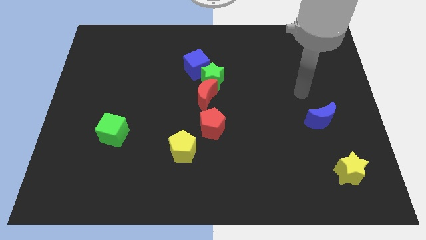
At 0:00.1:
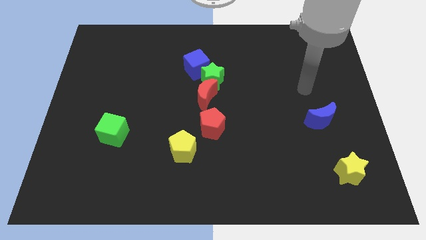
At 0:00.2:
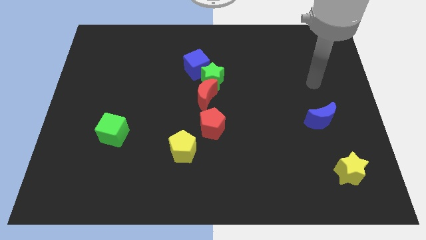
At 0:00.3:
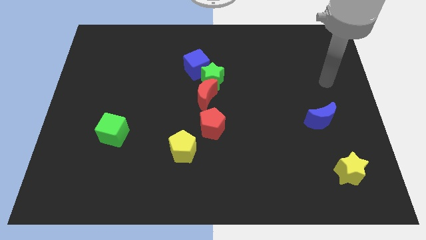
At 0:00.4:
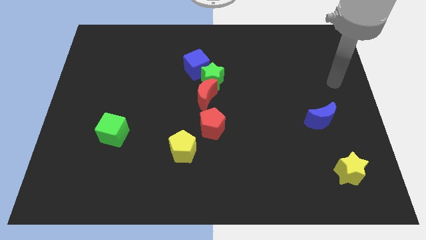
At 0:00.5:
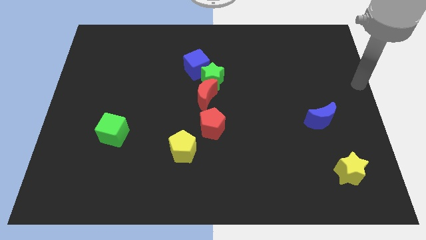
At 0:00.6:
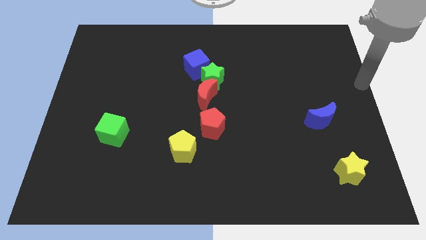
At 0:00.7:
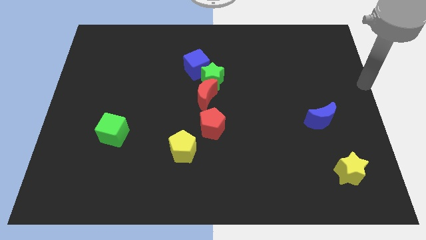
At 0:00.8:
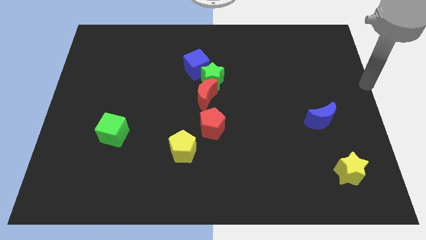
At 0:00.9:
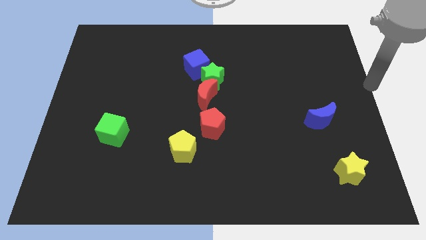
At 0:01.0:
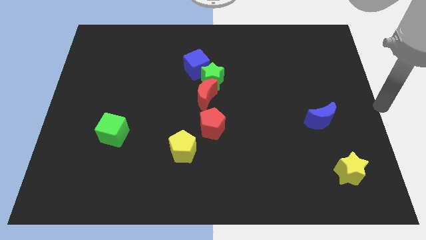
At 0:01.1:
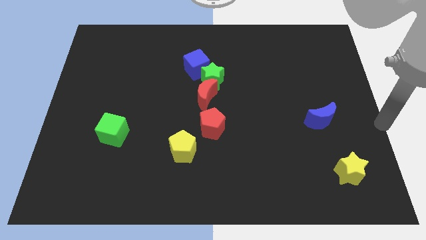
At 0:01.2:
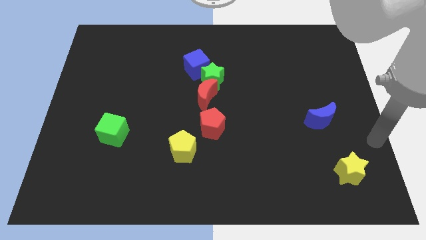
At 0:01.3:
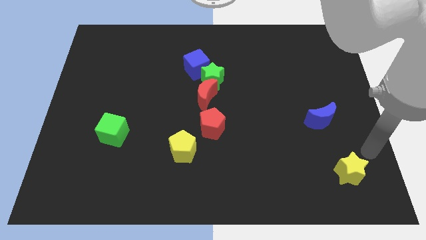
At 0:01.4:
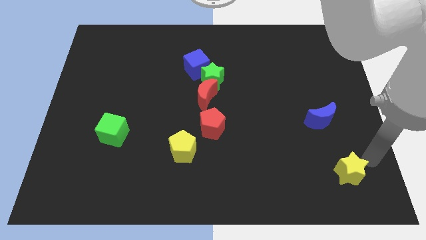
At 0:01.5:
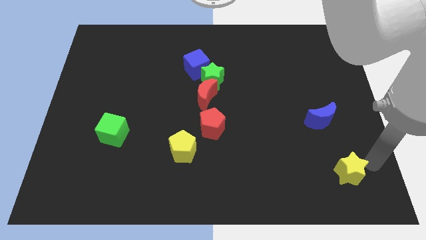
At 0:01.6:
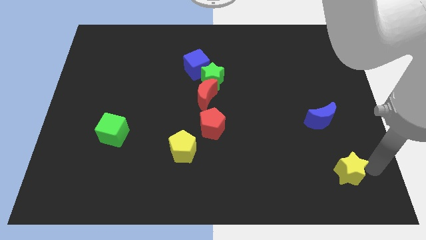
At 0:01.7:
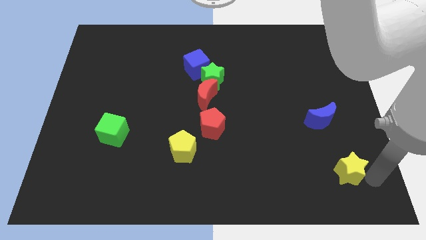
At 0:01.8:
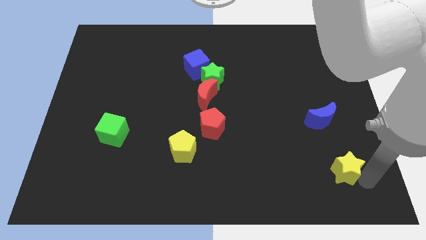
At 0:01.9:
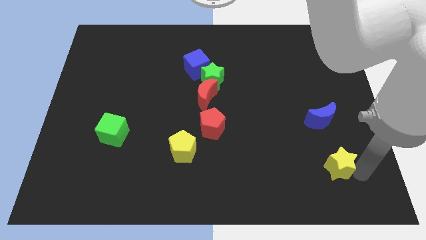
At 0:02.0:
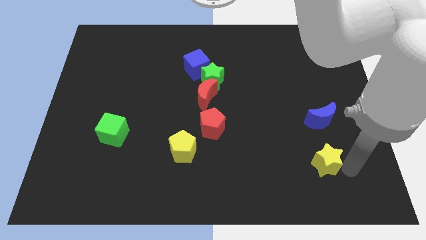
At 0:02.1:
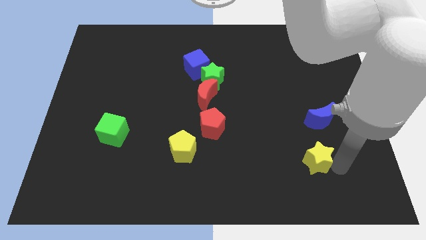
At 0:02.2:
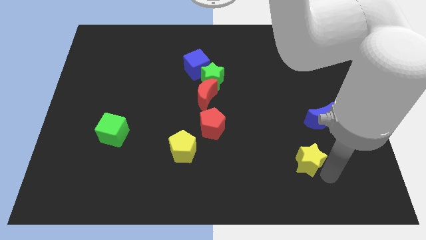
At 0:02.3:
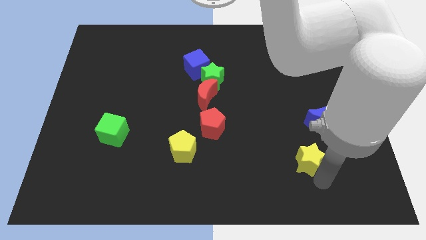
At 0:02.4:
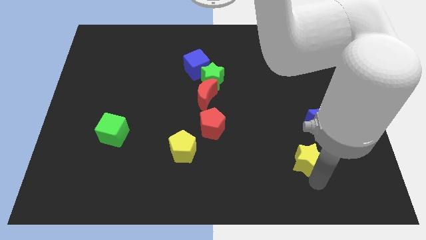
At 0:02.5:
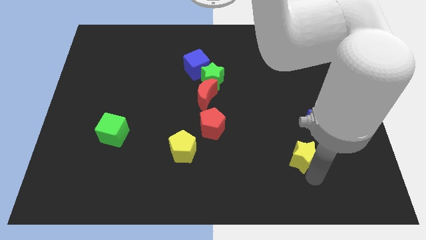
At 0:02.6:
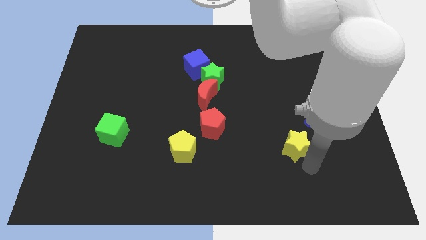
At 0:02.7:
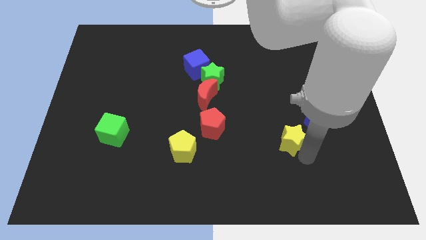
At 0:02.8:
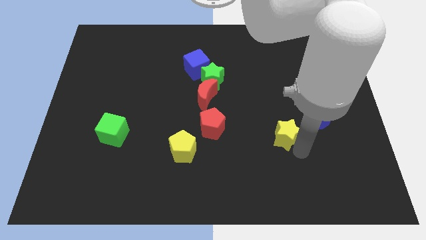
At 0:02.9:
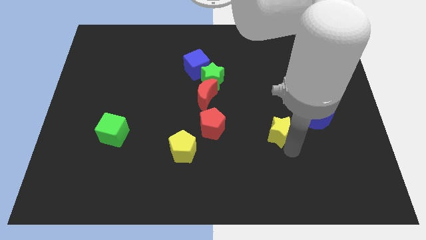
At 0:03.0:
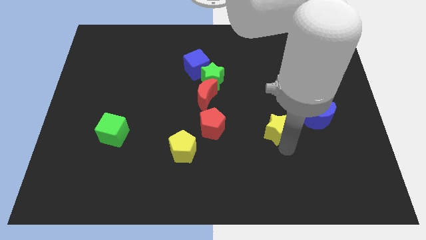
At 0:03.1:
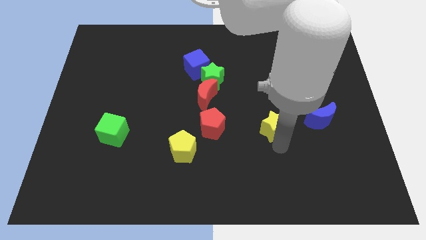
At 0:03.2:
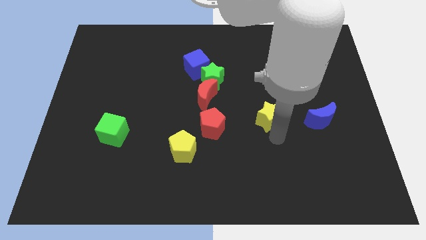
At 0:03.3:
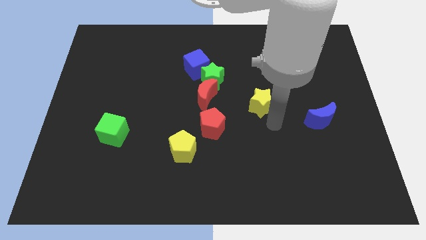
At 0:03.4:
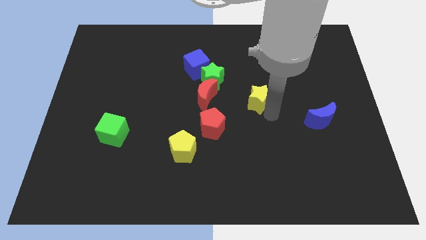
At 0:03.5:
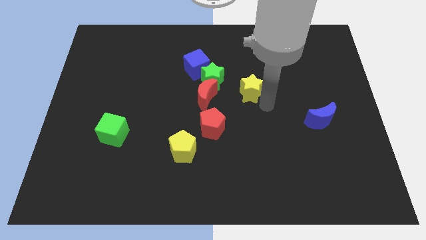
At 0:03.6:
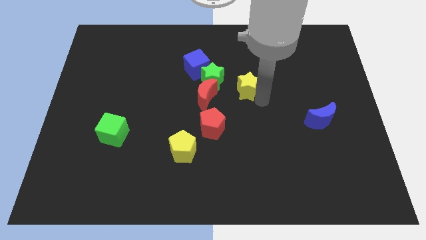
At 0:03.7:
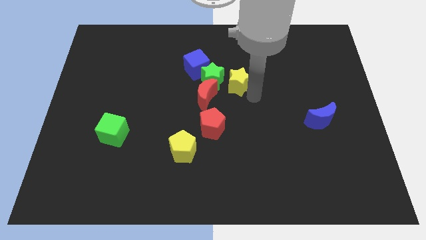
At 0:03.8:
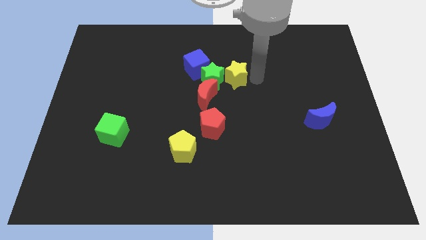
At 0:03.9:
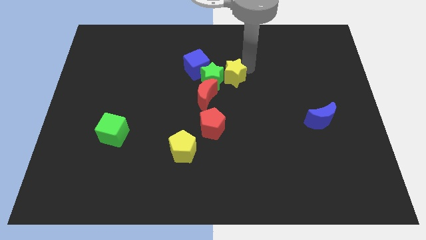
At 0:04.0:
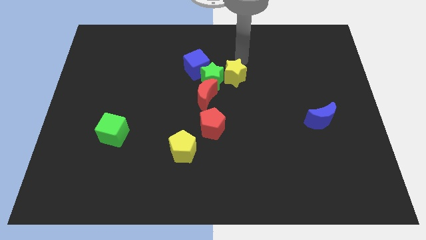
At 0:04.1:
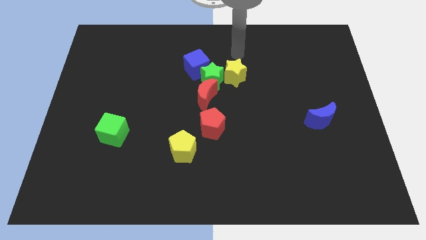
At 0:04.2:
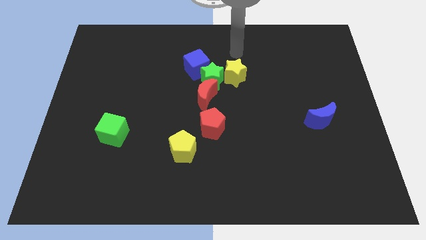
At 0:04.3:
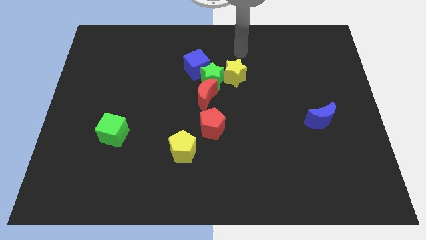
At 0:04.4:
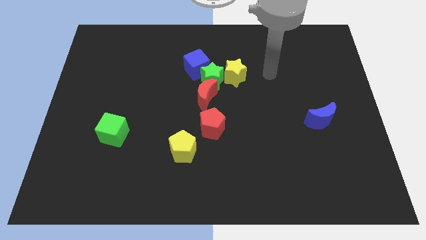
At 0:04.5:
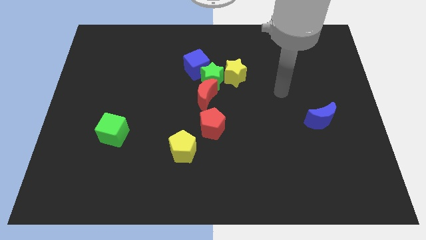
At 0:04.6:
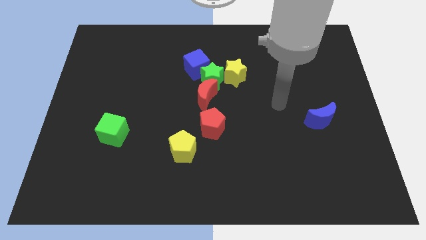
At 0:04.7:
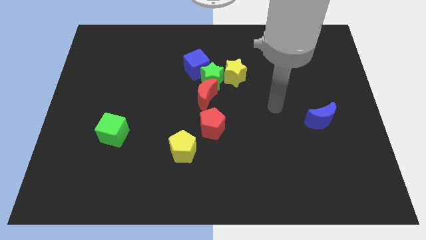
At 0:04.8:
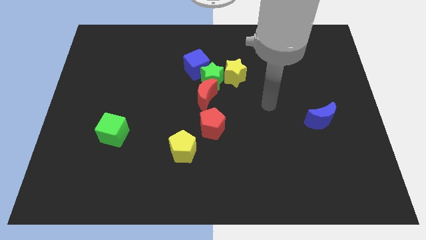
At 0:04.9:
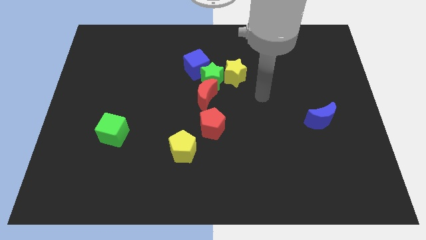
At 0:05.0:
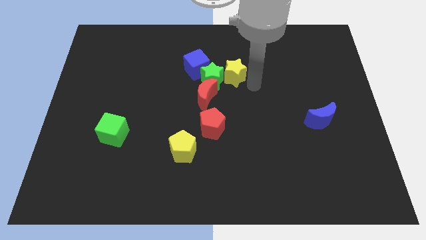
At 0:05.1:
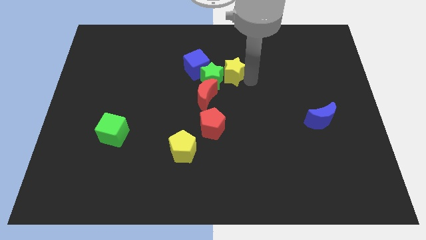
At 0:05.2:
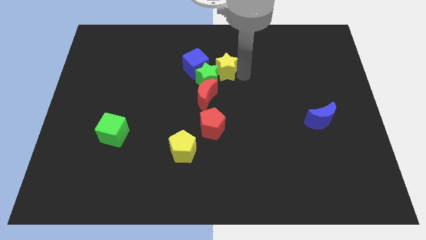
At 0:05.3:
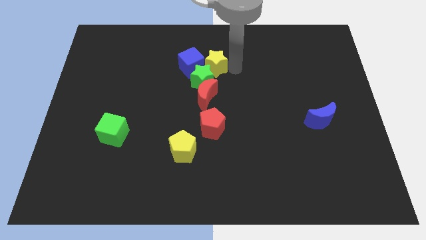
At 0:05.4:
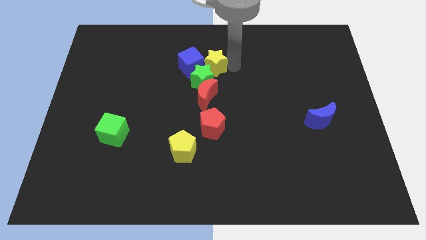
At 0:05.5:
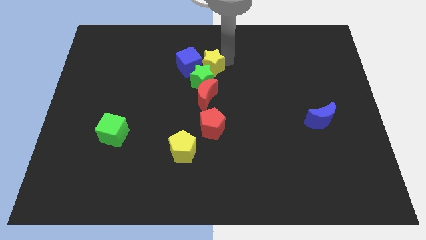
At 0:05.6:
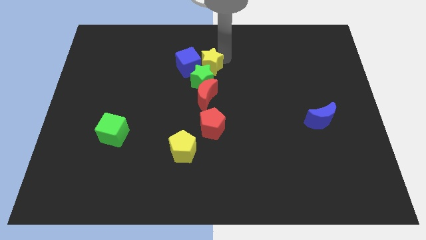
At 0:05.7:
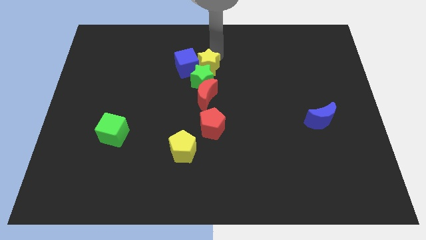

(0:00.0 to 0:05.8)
slide the yellow star next to the blue cube

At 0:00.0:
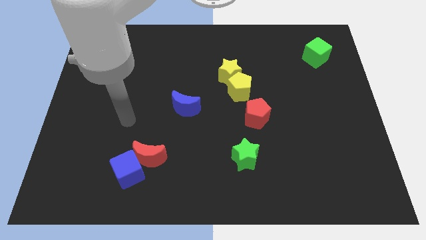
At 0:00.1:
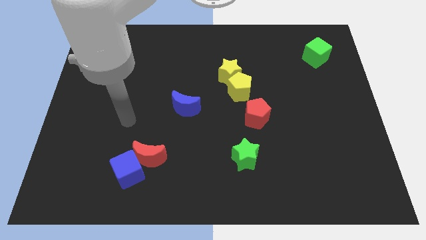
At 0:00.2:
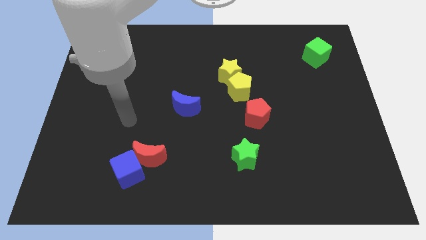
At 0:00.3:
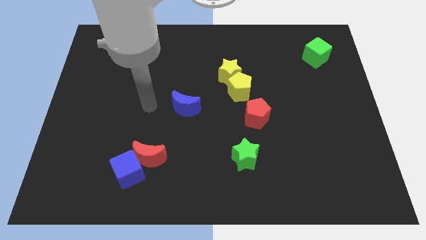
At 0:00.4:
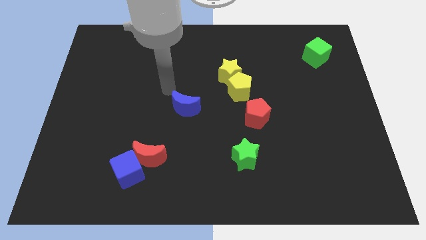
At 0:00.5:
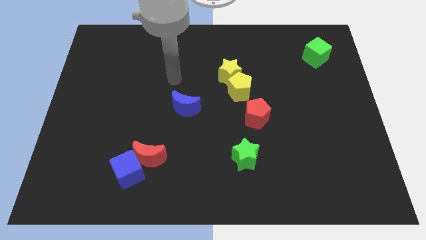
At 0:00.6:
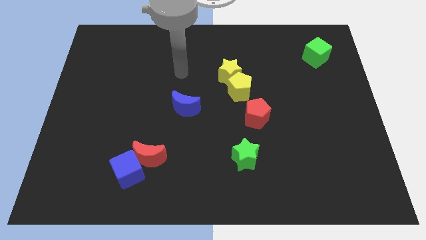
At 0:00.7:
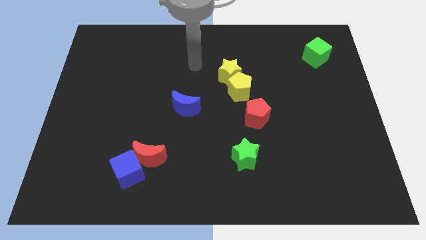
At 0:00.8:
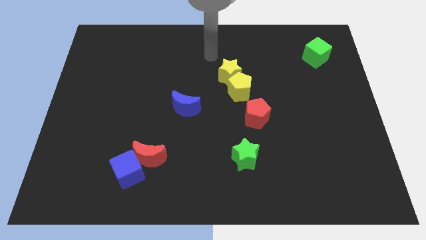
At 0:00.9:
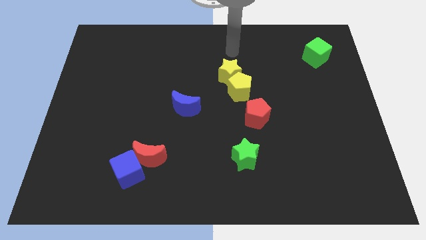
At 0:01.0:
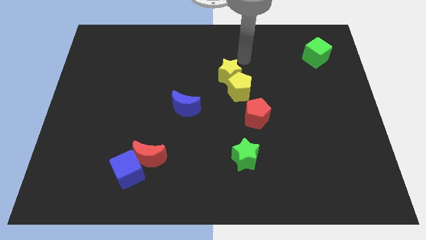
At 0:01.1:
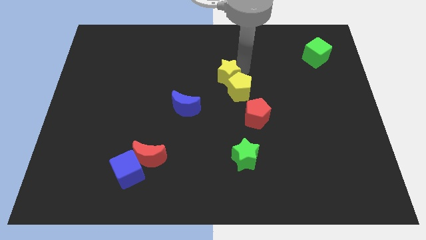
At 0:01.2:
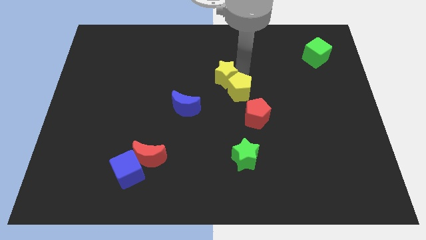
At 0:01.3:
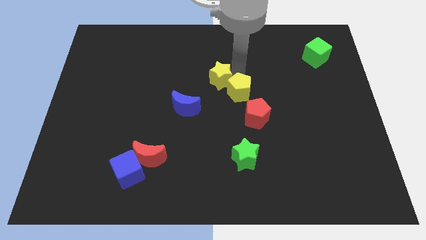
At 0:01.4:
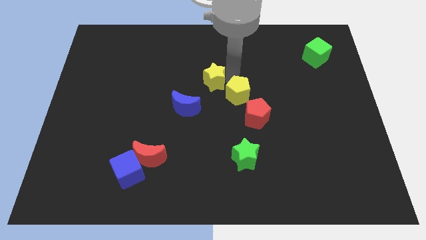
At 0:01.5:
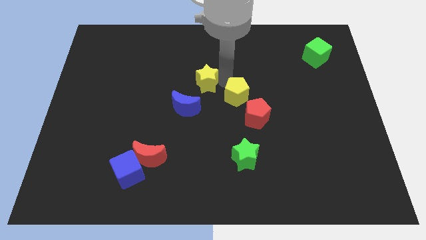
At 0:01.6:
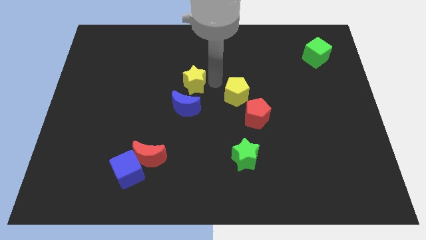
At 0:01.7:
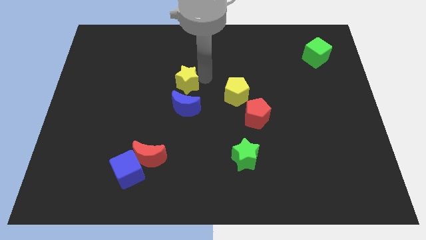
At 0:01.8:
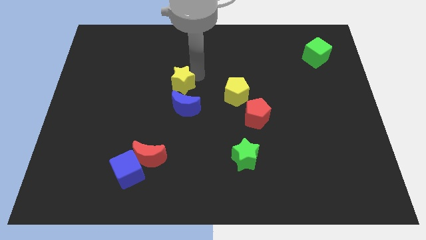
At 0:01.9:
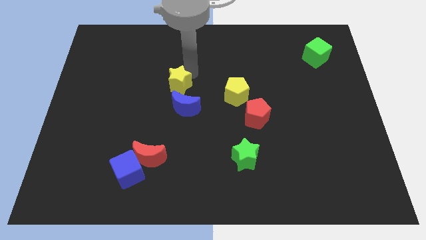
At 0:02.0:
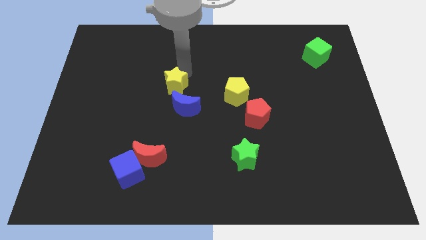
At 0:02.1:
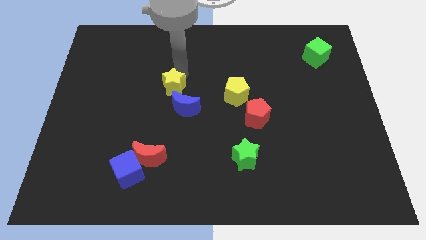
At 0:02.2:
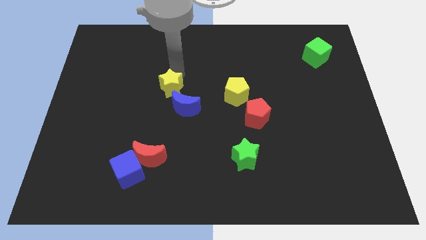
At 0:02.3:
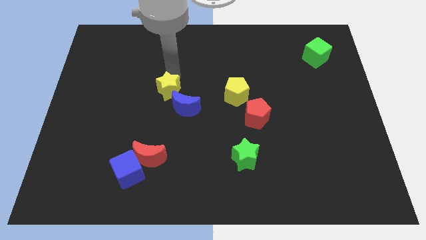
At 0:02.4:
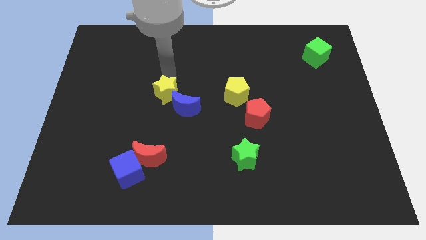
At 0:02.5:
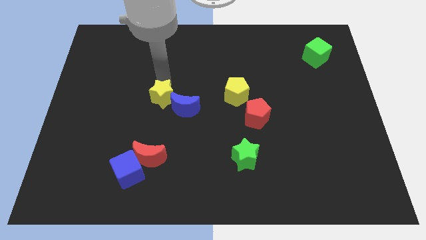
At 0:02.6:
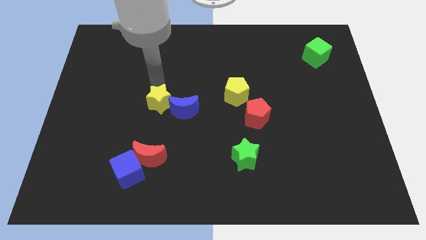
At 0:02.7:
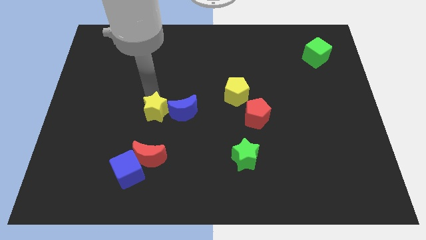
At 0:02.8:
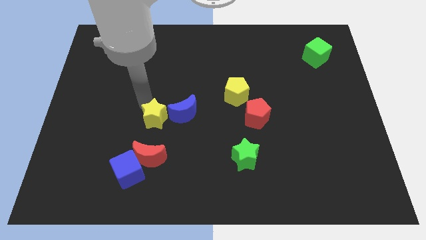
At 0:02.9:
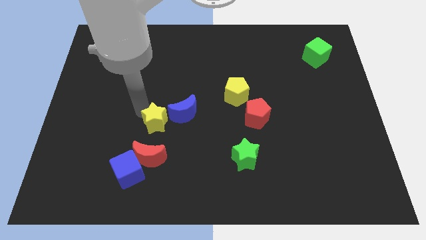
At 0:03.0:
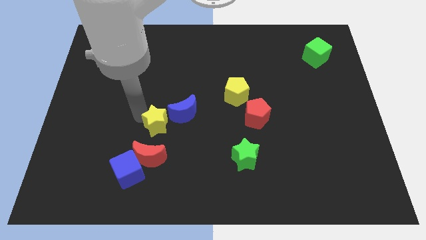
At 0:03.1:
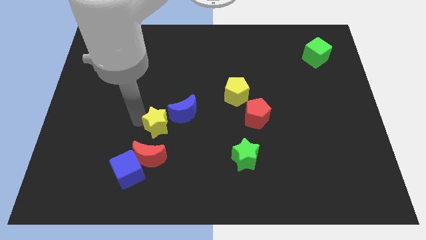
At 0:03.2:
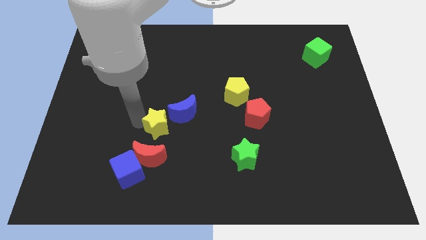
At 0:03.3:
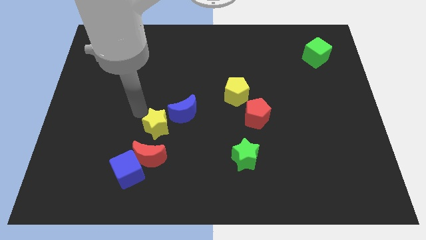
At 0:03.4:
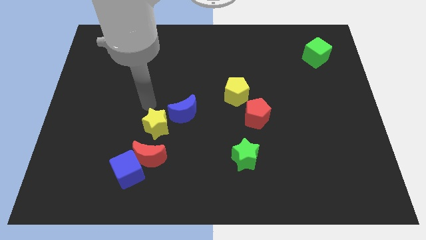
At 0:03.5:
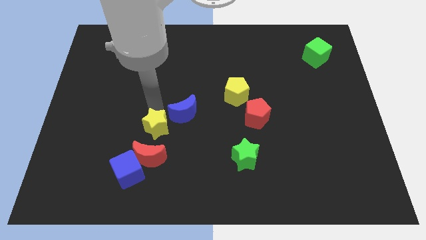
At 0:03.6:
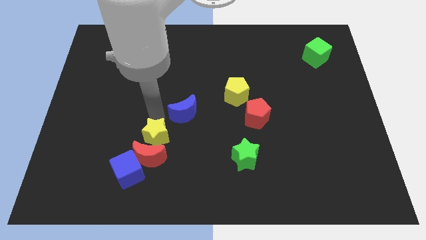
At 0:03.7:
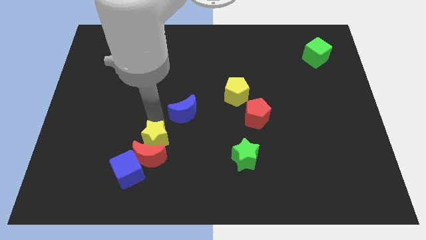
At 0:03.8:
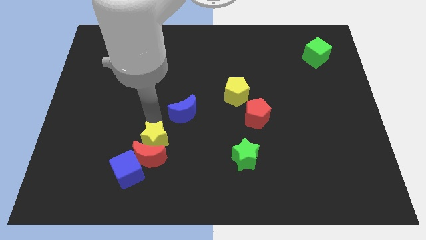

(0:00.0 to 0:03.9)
move the yellow star close to the red moon
